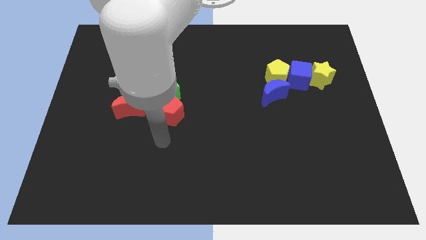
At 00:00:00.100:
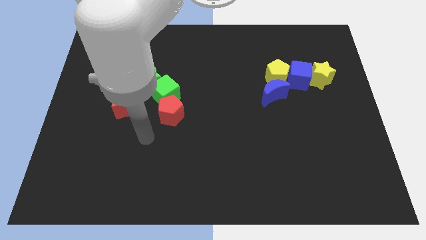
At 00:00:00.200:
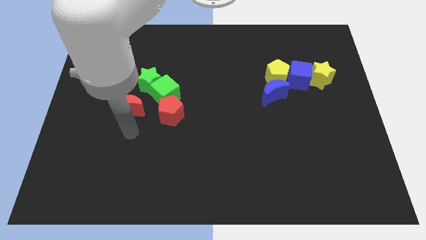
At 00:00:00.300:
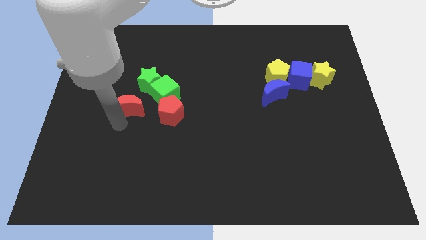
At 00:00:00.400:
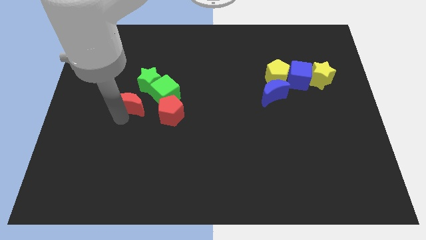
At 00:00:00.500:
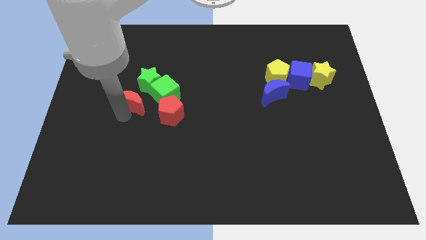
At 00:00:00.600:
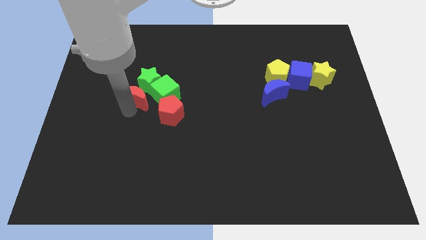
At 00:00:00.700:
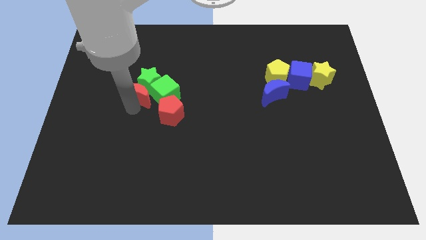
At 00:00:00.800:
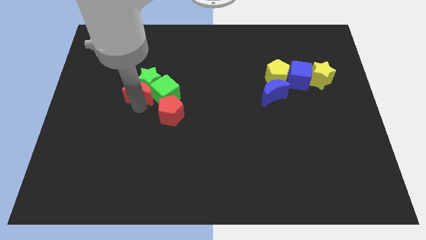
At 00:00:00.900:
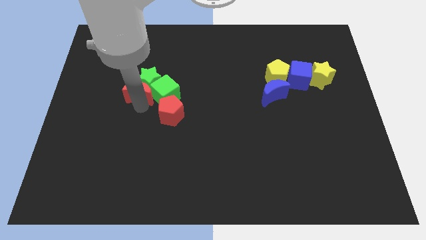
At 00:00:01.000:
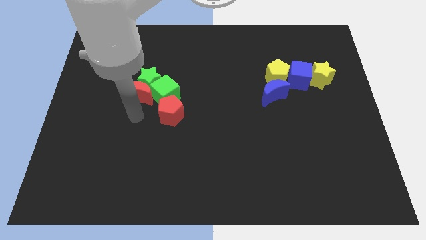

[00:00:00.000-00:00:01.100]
move the red crescent right side to the green cube

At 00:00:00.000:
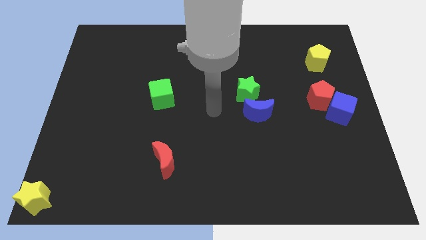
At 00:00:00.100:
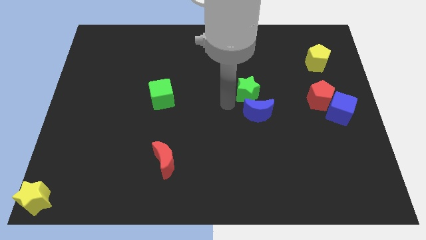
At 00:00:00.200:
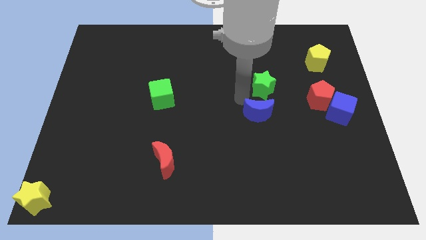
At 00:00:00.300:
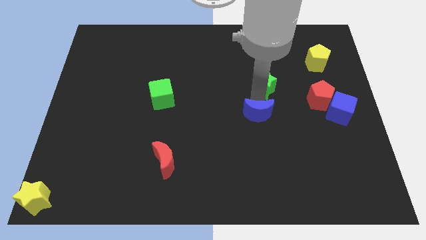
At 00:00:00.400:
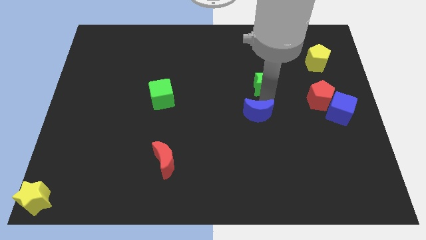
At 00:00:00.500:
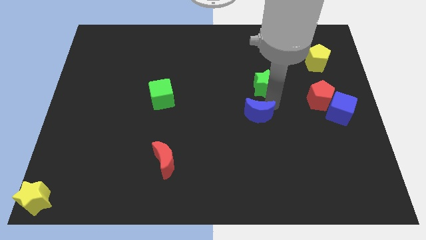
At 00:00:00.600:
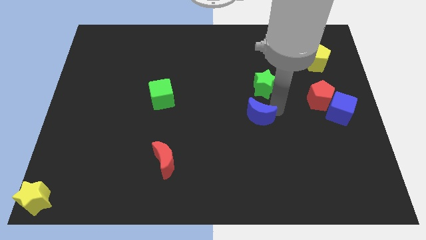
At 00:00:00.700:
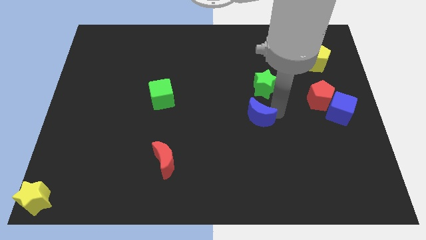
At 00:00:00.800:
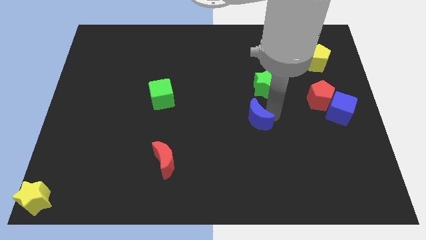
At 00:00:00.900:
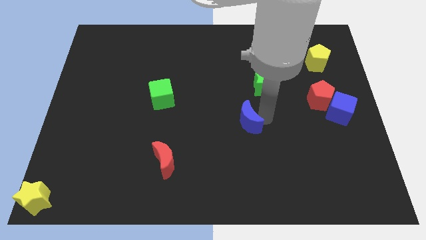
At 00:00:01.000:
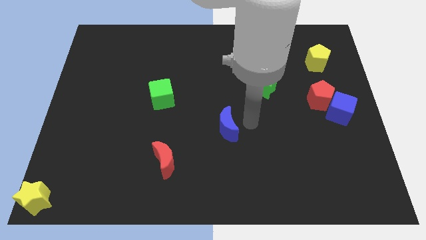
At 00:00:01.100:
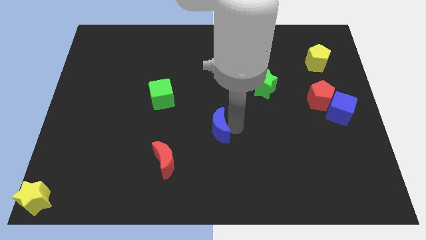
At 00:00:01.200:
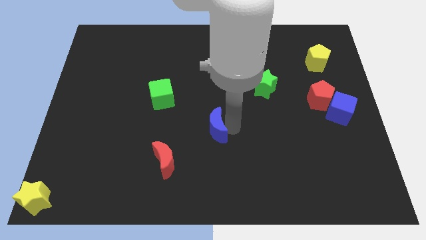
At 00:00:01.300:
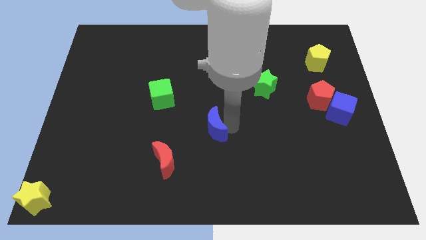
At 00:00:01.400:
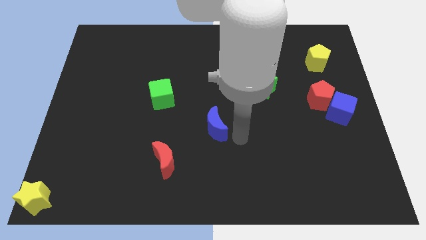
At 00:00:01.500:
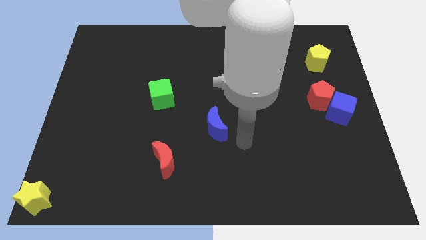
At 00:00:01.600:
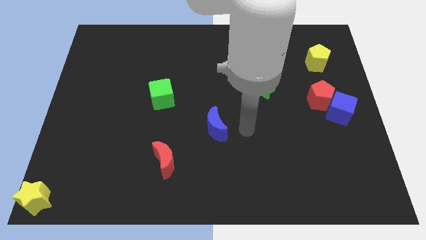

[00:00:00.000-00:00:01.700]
separate the blue crescent with the green star

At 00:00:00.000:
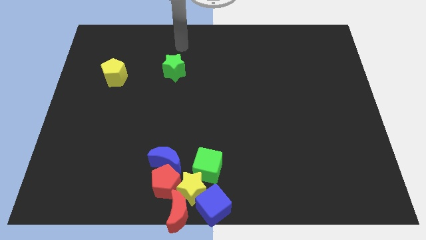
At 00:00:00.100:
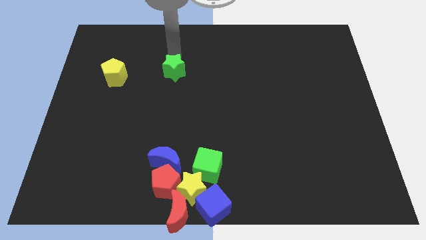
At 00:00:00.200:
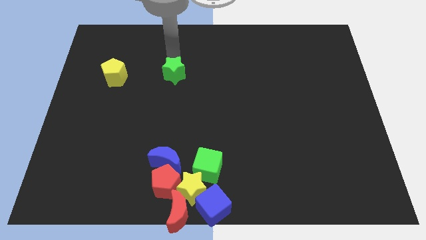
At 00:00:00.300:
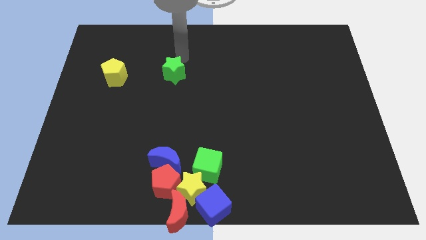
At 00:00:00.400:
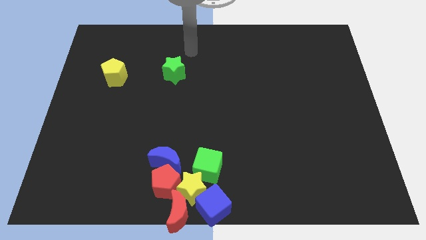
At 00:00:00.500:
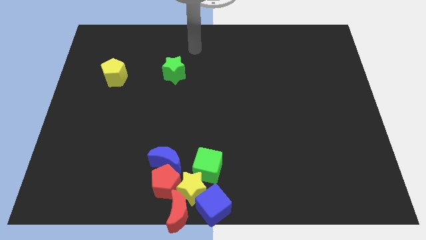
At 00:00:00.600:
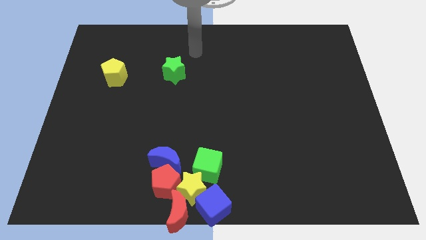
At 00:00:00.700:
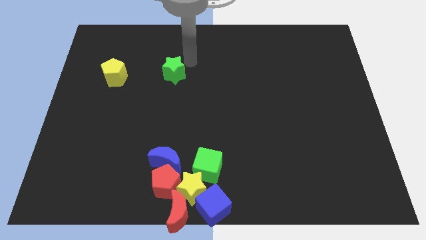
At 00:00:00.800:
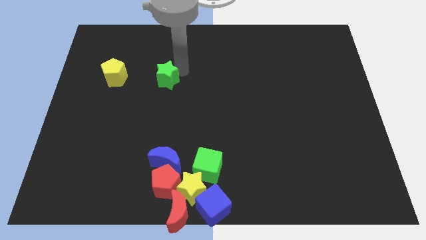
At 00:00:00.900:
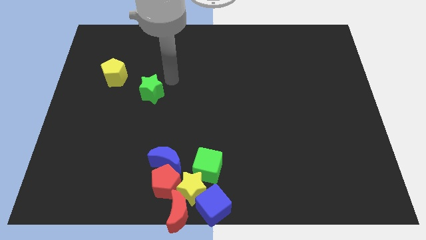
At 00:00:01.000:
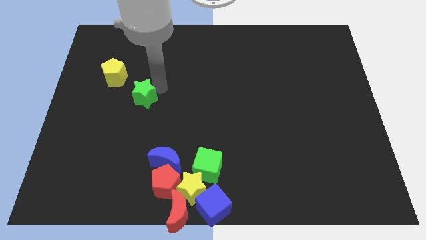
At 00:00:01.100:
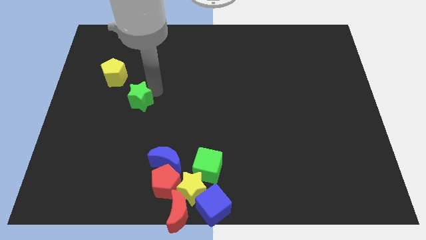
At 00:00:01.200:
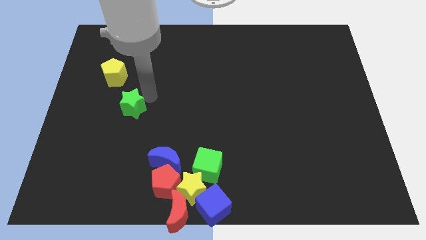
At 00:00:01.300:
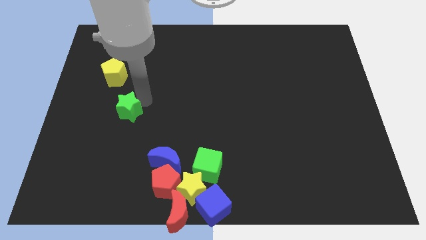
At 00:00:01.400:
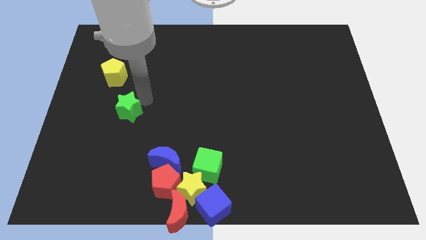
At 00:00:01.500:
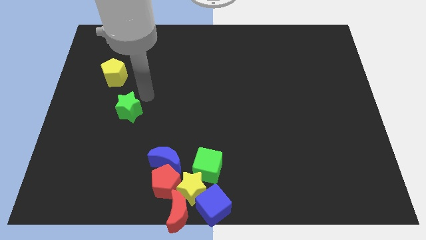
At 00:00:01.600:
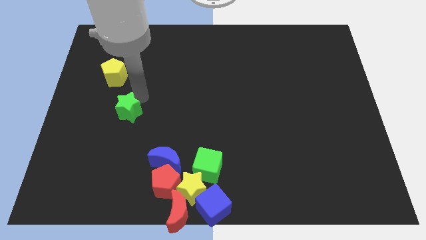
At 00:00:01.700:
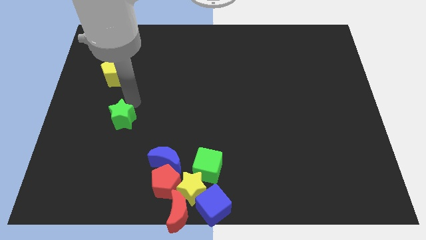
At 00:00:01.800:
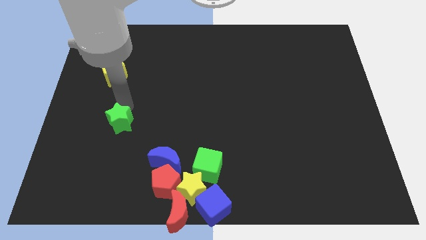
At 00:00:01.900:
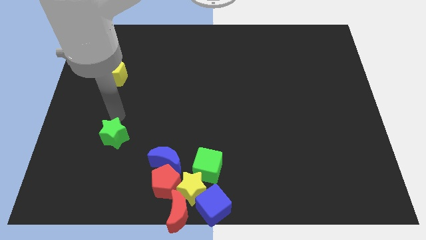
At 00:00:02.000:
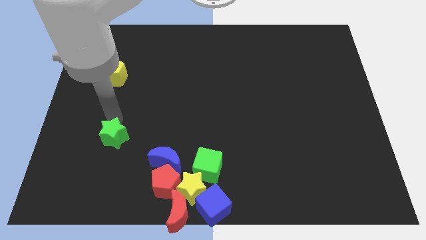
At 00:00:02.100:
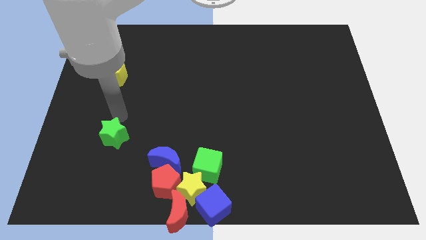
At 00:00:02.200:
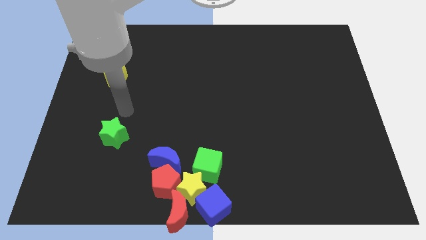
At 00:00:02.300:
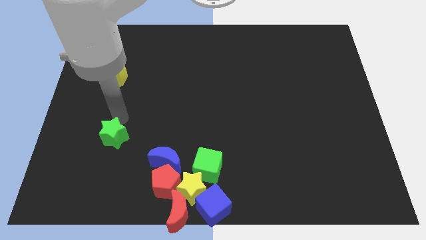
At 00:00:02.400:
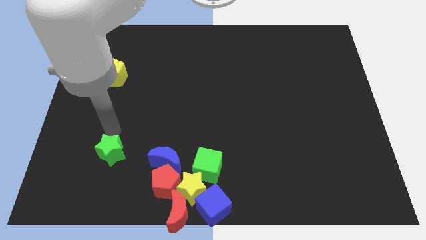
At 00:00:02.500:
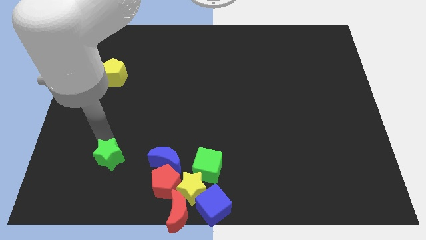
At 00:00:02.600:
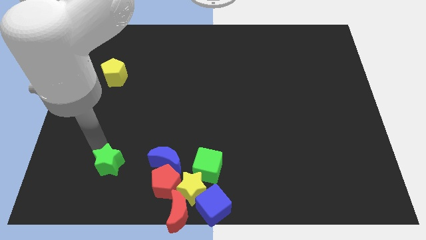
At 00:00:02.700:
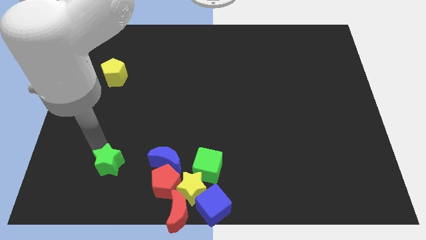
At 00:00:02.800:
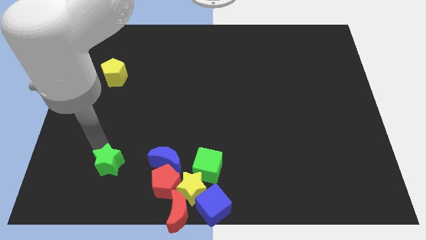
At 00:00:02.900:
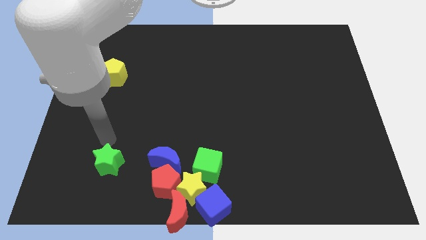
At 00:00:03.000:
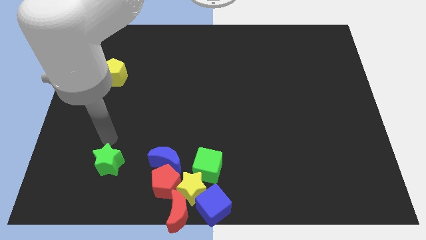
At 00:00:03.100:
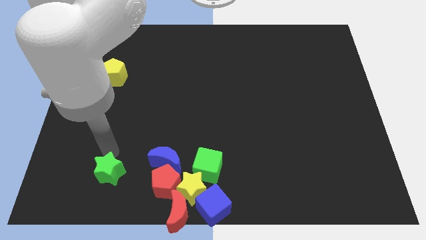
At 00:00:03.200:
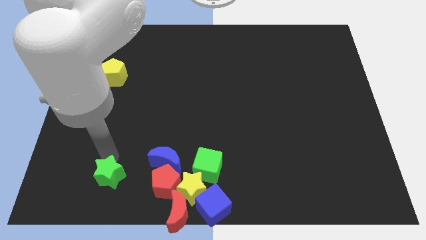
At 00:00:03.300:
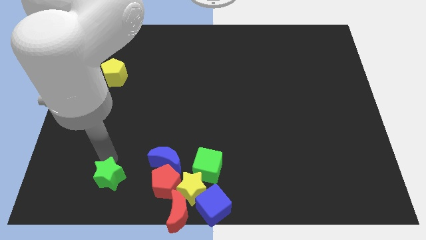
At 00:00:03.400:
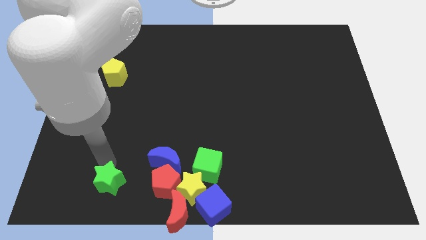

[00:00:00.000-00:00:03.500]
push the green star parallel to the red pentagon

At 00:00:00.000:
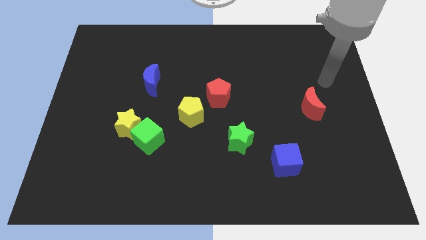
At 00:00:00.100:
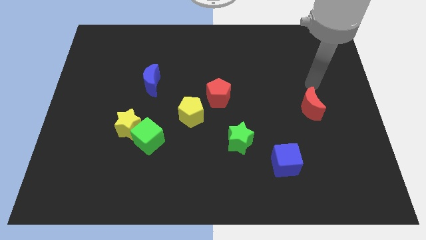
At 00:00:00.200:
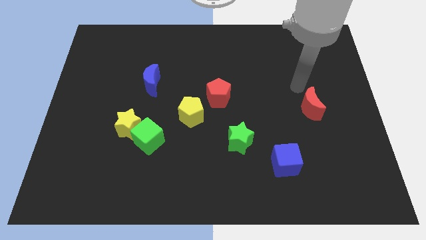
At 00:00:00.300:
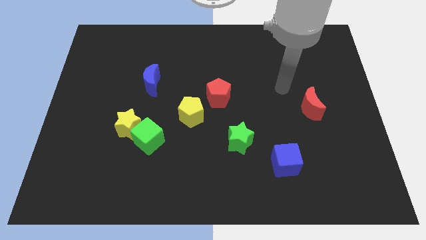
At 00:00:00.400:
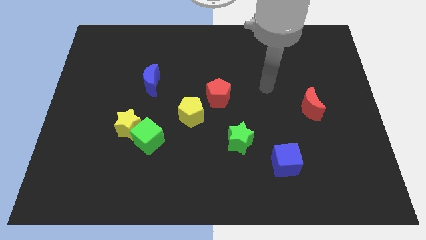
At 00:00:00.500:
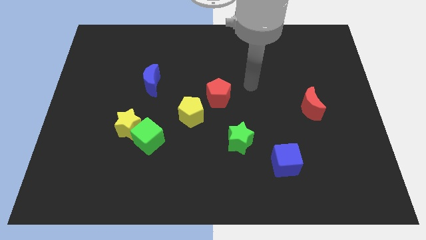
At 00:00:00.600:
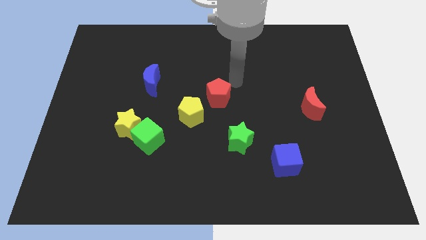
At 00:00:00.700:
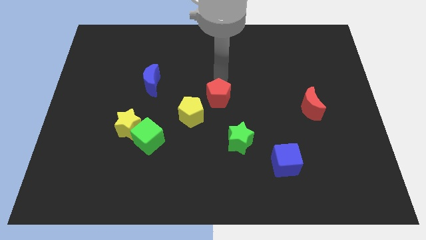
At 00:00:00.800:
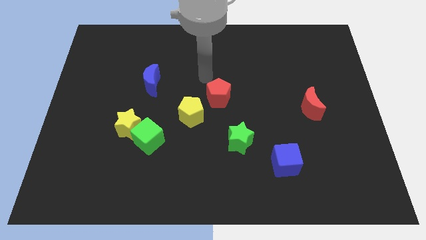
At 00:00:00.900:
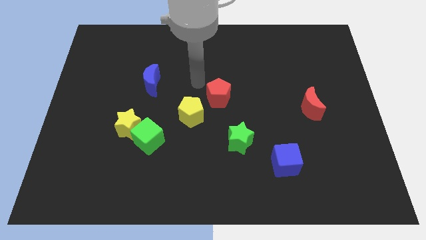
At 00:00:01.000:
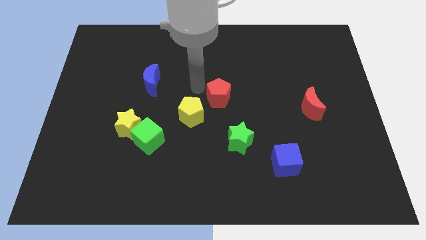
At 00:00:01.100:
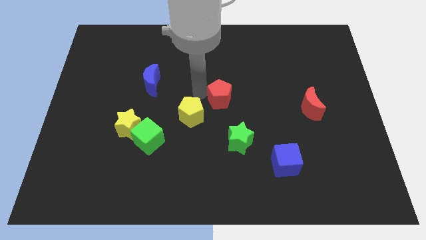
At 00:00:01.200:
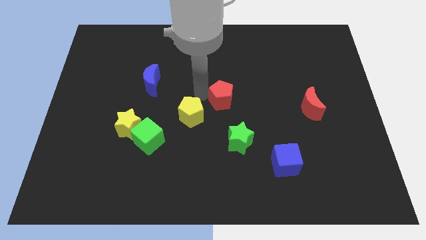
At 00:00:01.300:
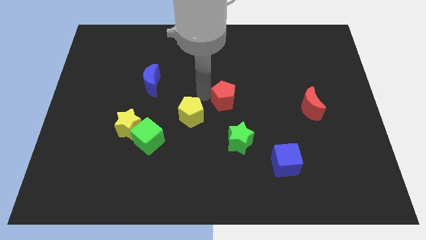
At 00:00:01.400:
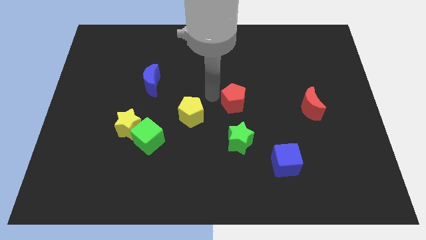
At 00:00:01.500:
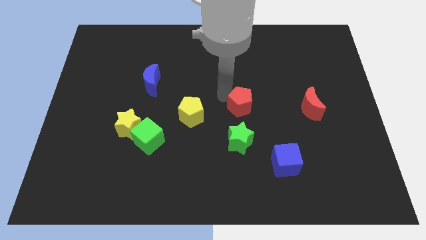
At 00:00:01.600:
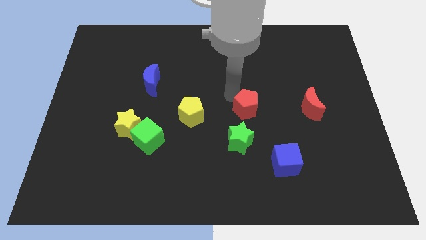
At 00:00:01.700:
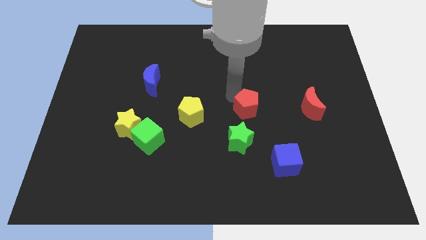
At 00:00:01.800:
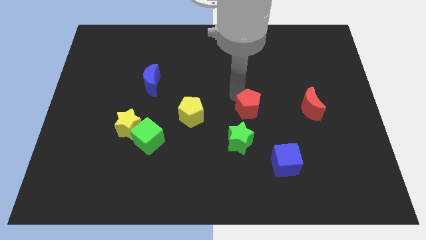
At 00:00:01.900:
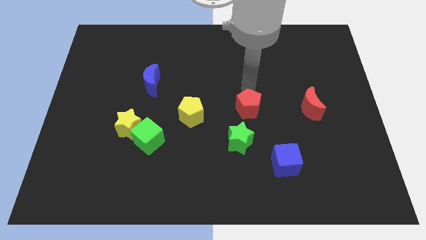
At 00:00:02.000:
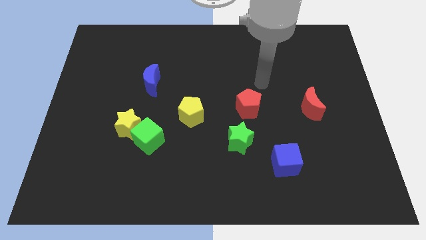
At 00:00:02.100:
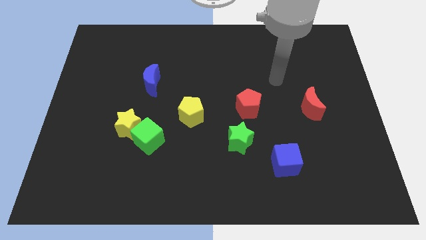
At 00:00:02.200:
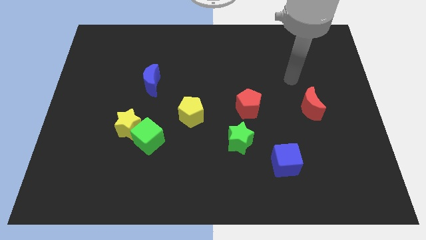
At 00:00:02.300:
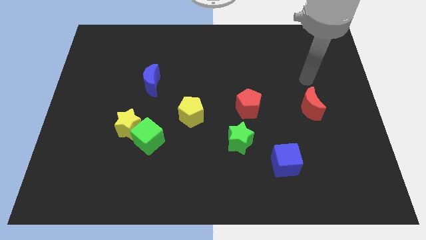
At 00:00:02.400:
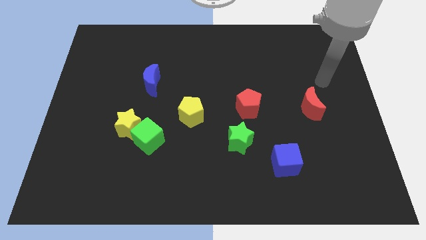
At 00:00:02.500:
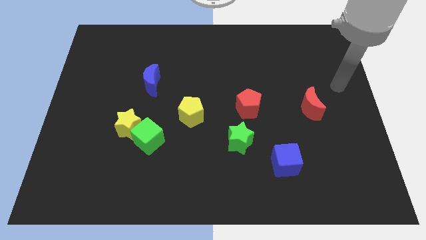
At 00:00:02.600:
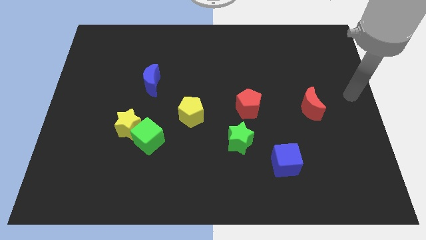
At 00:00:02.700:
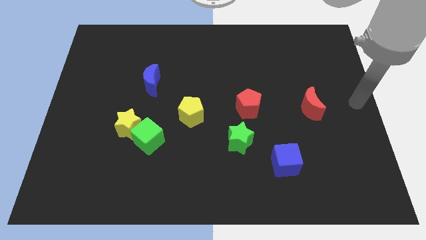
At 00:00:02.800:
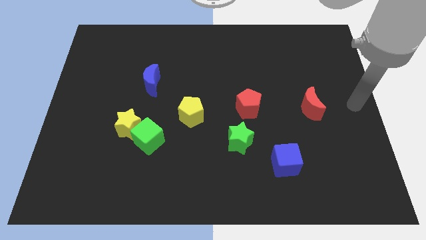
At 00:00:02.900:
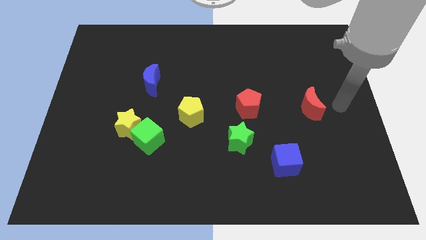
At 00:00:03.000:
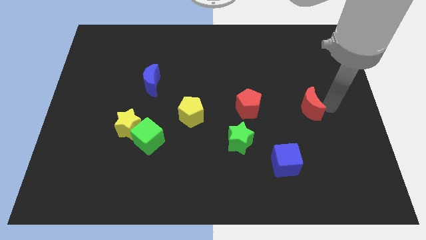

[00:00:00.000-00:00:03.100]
place the arm right to the red moon
